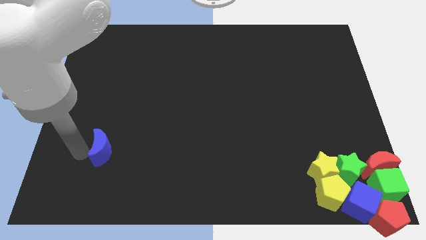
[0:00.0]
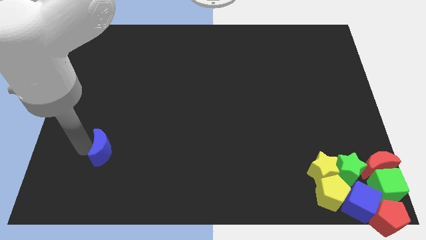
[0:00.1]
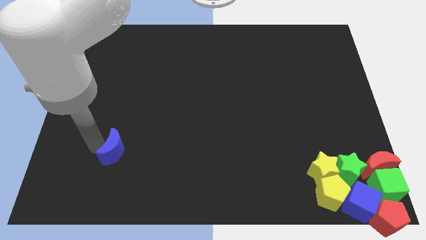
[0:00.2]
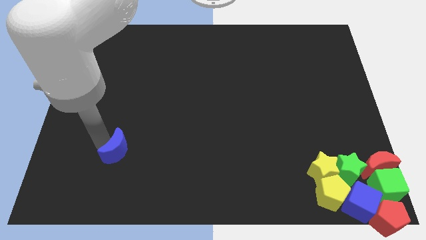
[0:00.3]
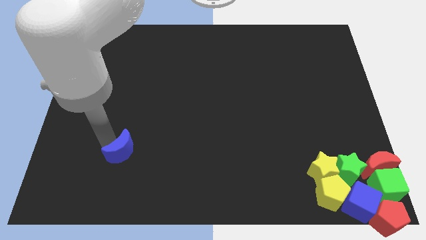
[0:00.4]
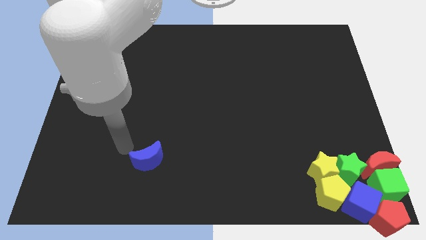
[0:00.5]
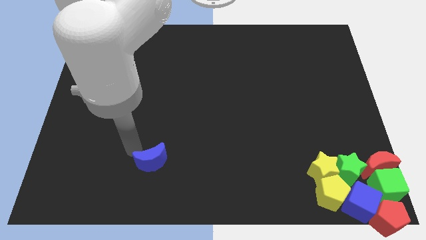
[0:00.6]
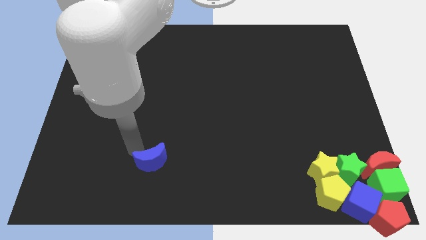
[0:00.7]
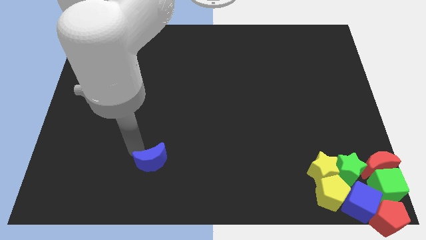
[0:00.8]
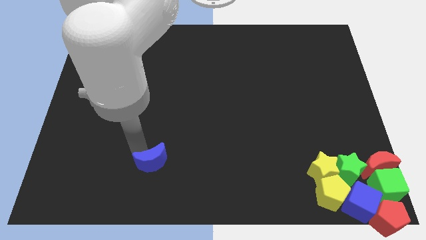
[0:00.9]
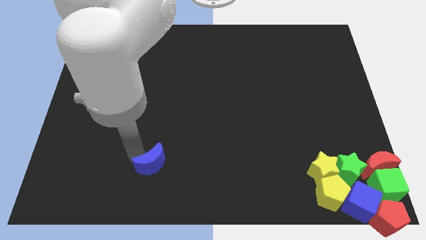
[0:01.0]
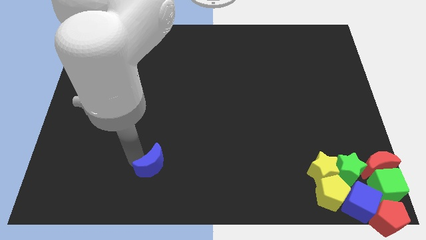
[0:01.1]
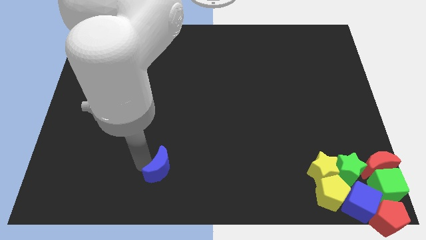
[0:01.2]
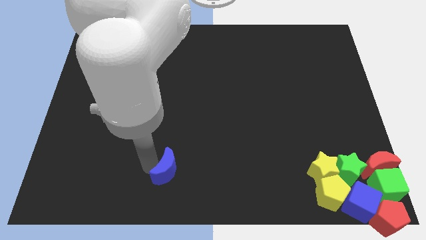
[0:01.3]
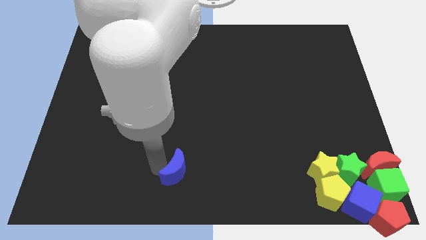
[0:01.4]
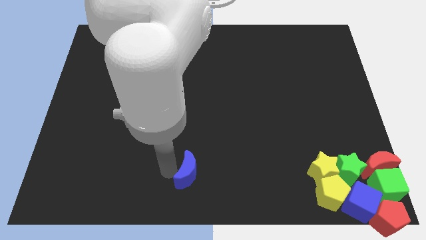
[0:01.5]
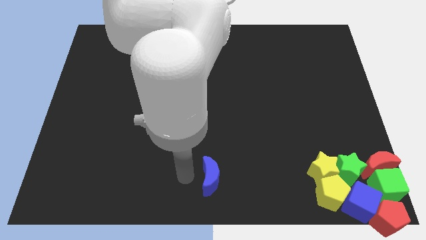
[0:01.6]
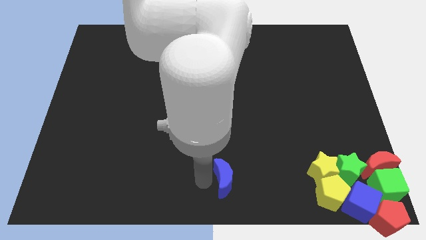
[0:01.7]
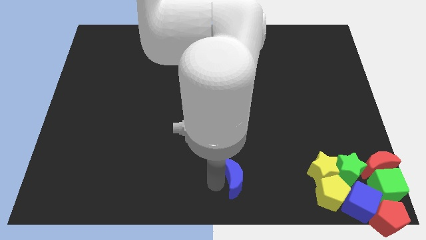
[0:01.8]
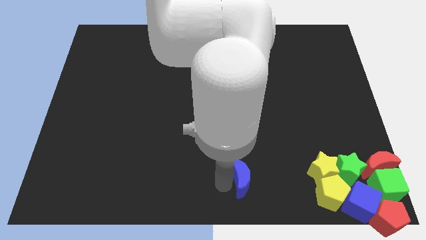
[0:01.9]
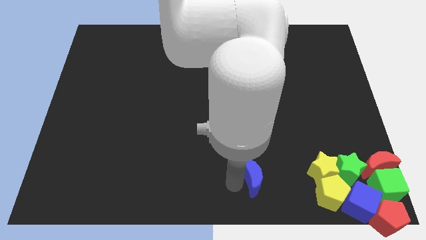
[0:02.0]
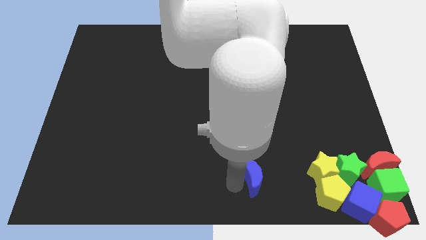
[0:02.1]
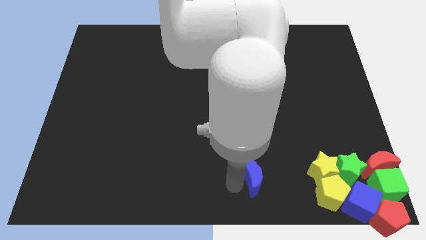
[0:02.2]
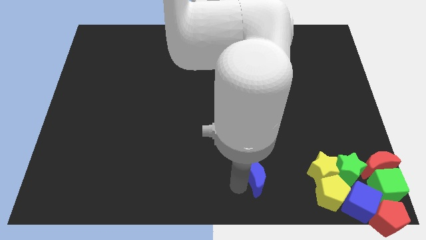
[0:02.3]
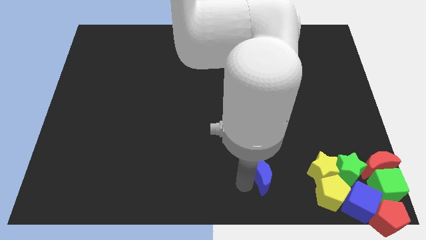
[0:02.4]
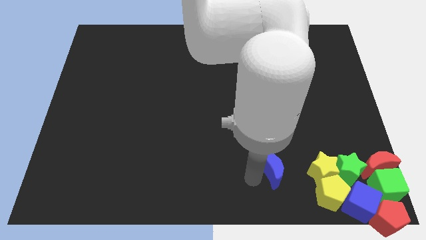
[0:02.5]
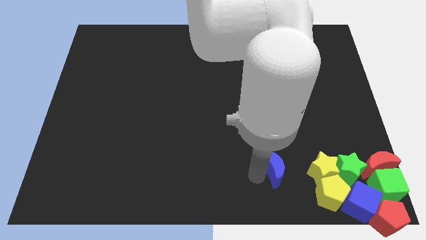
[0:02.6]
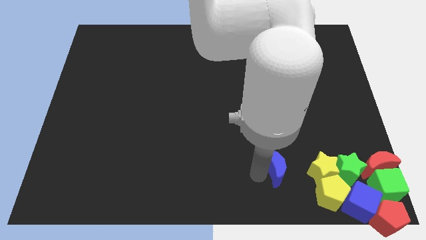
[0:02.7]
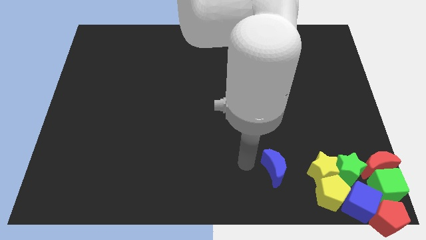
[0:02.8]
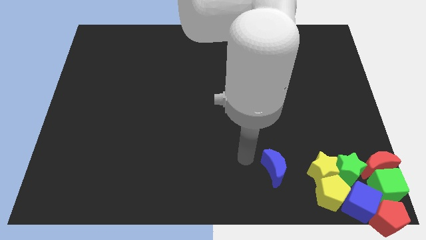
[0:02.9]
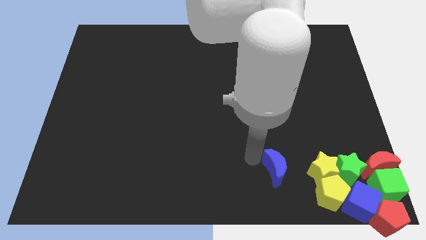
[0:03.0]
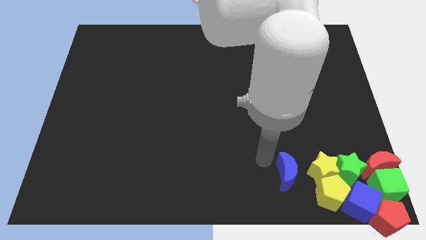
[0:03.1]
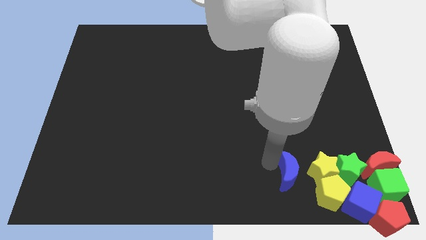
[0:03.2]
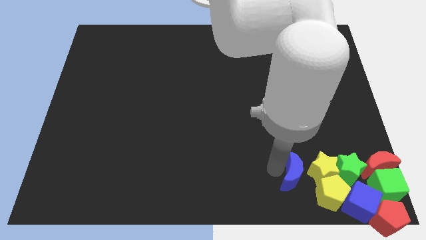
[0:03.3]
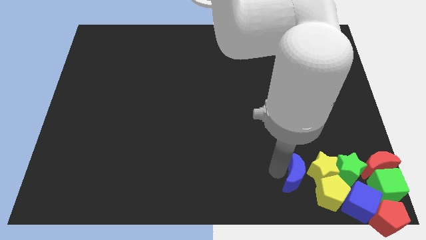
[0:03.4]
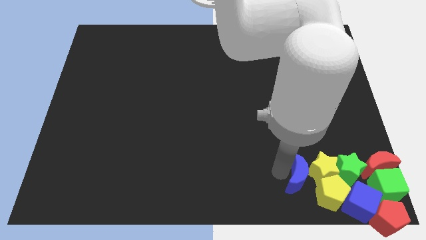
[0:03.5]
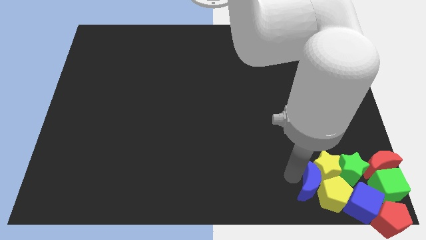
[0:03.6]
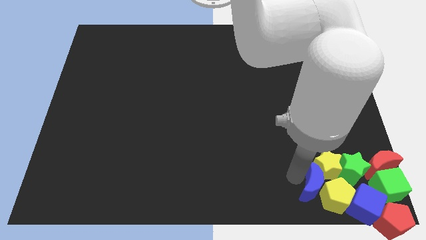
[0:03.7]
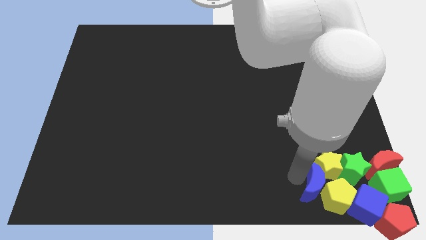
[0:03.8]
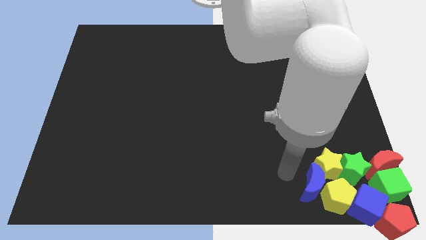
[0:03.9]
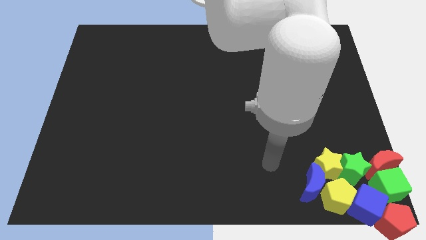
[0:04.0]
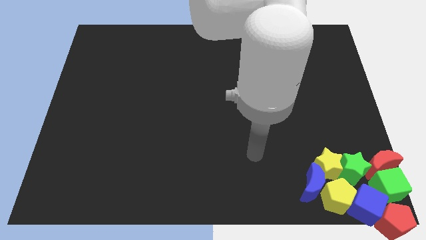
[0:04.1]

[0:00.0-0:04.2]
push the blue moon into the yellow pentagon

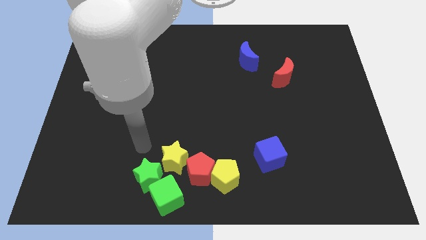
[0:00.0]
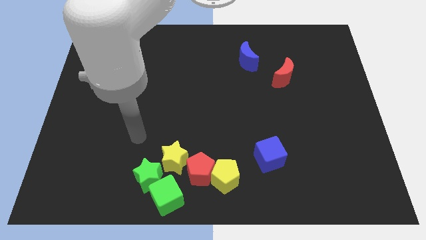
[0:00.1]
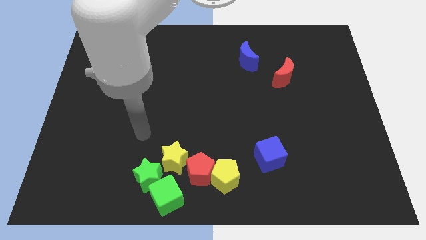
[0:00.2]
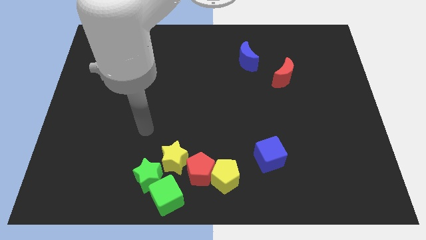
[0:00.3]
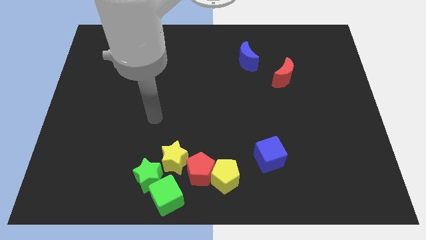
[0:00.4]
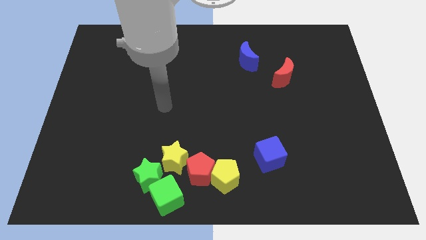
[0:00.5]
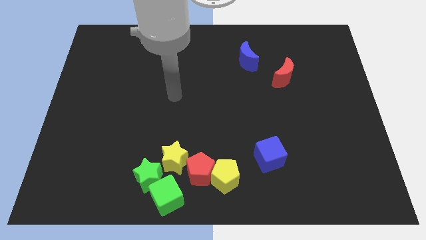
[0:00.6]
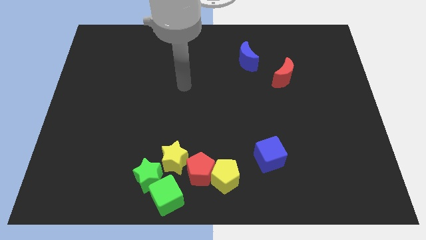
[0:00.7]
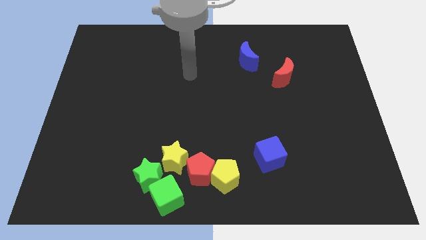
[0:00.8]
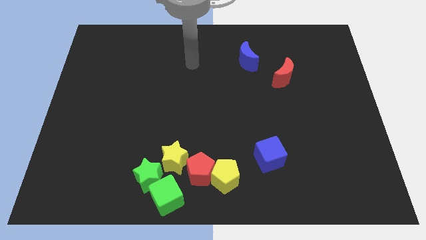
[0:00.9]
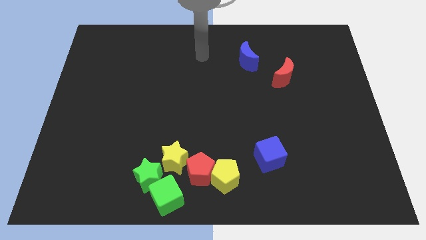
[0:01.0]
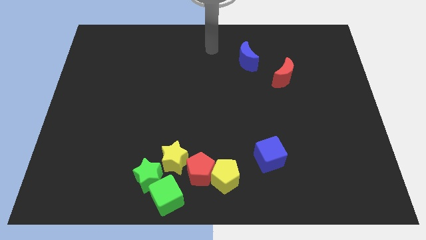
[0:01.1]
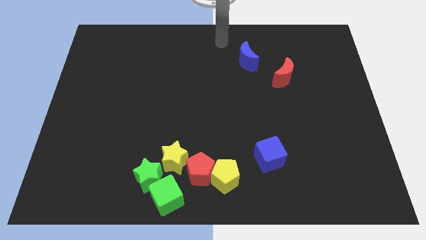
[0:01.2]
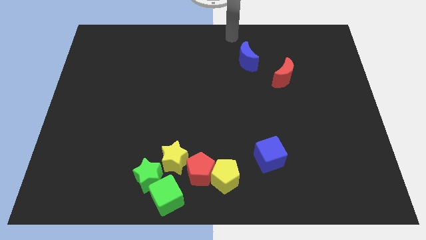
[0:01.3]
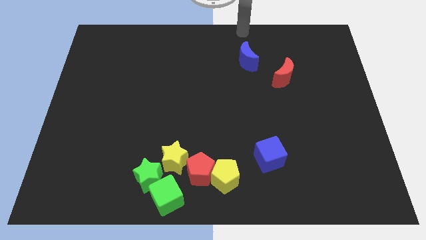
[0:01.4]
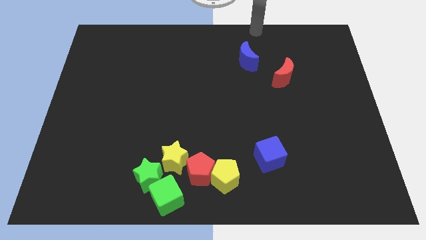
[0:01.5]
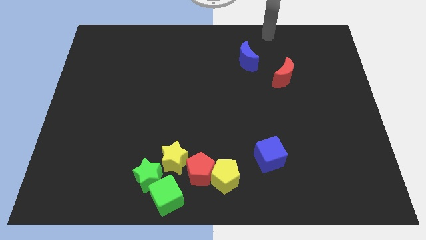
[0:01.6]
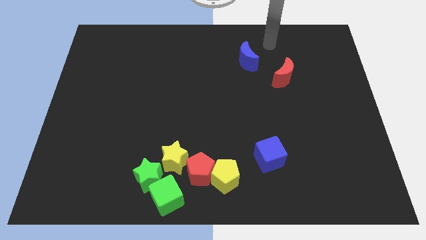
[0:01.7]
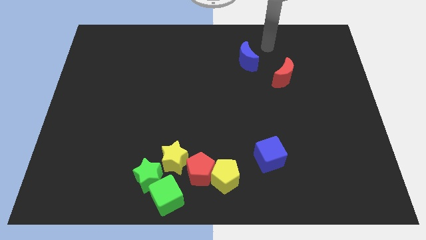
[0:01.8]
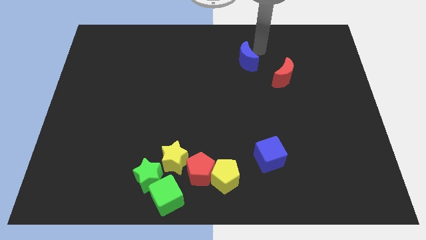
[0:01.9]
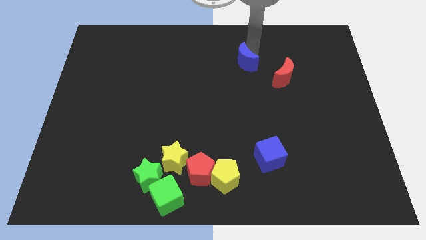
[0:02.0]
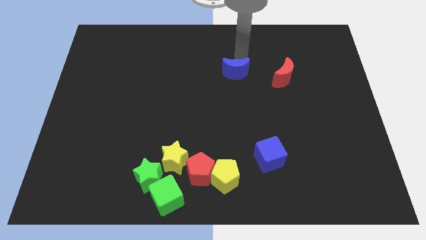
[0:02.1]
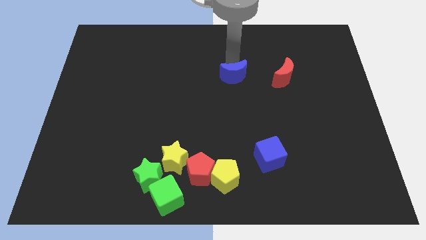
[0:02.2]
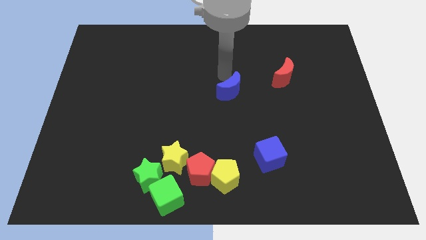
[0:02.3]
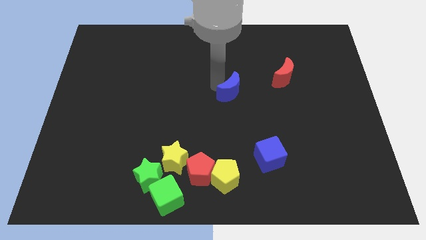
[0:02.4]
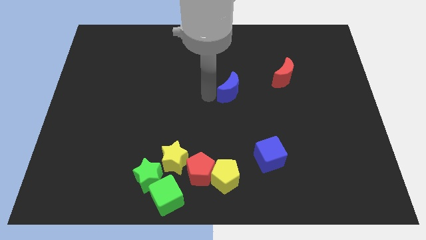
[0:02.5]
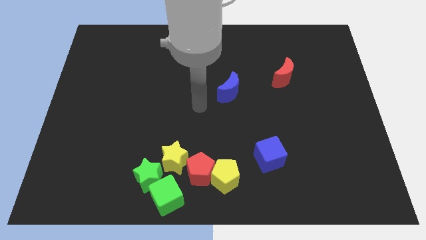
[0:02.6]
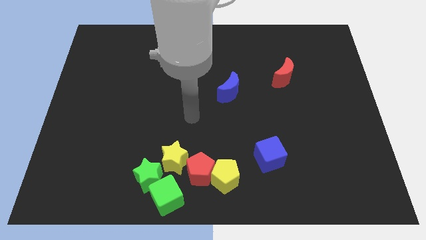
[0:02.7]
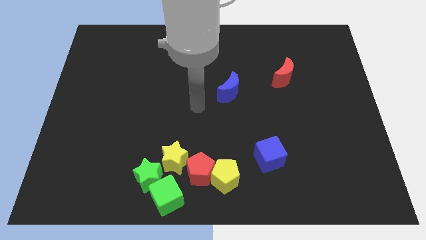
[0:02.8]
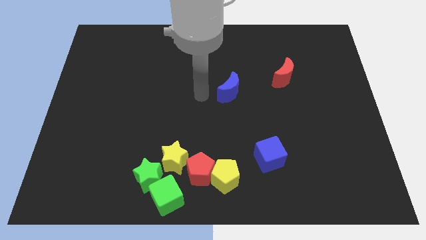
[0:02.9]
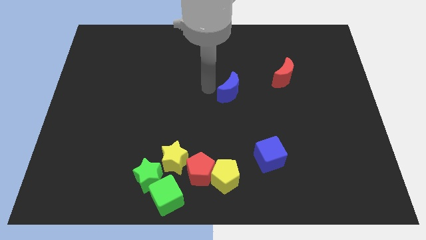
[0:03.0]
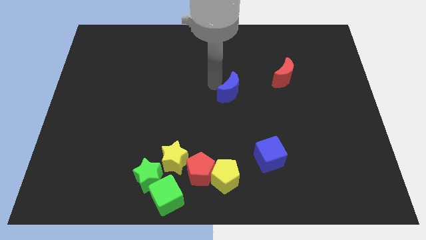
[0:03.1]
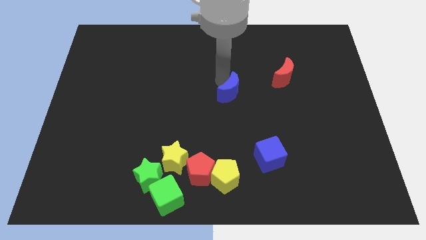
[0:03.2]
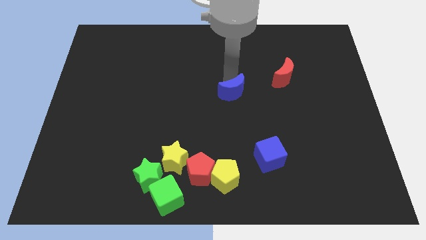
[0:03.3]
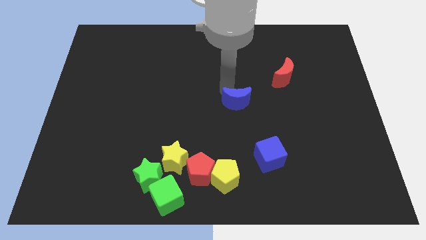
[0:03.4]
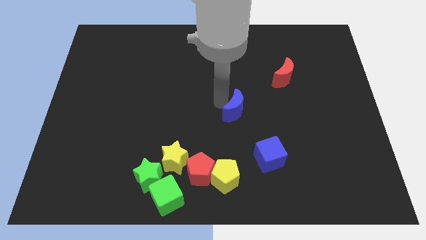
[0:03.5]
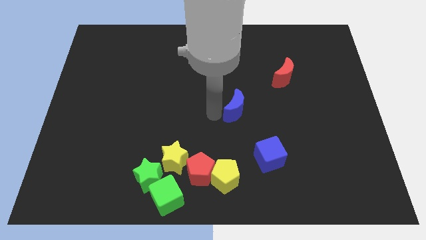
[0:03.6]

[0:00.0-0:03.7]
move the blue crescent diagonally on the top right side of the red pentagon

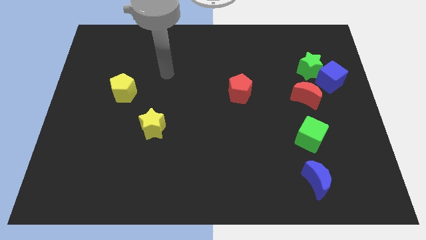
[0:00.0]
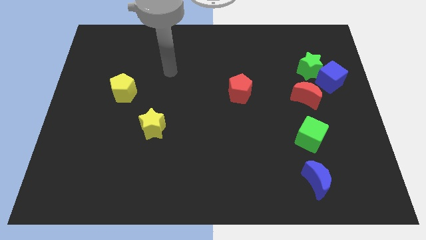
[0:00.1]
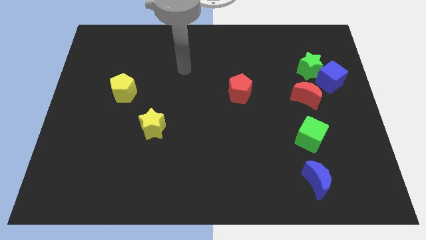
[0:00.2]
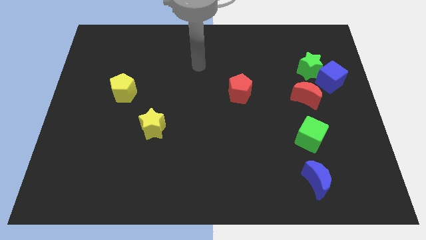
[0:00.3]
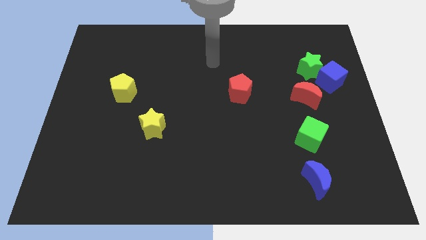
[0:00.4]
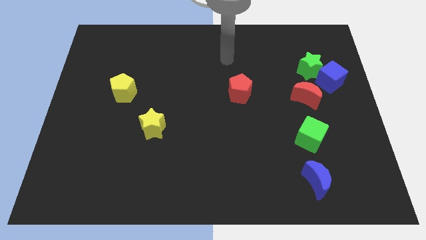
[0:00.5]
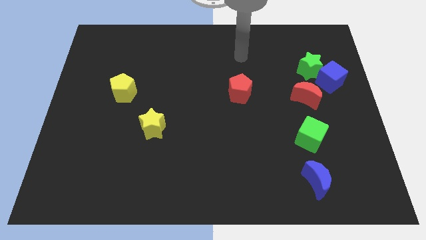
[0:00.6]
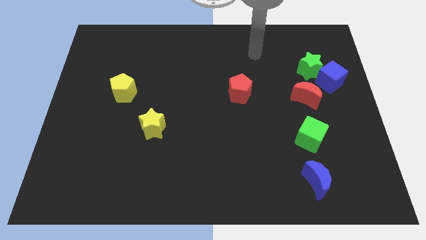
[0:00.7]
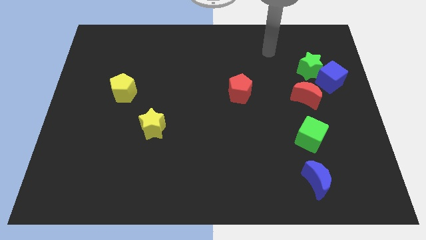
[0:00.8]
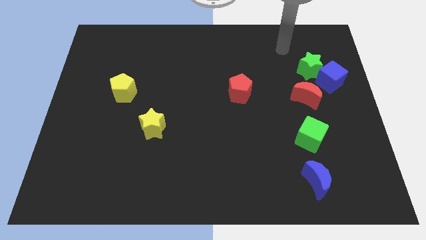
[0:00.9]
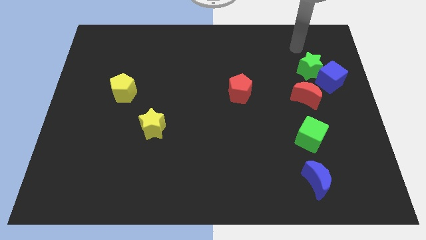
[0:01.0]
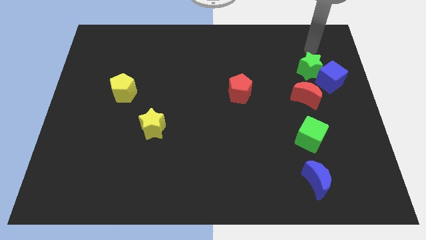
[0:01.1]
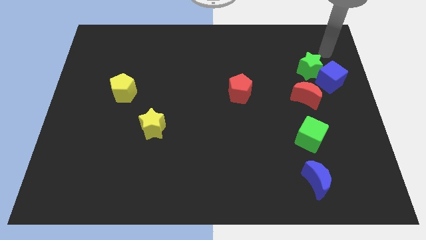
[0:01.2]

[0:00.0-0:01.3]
point the arm above the green star
